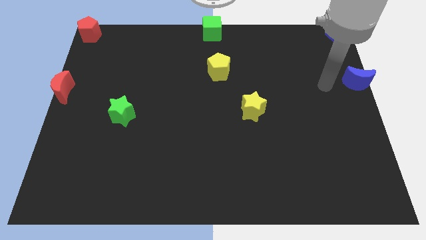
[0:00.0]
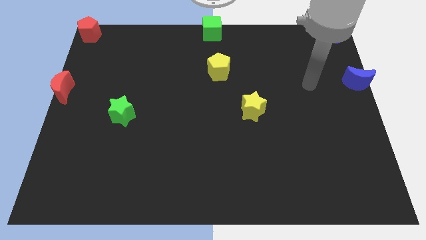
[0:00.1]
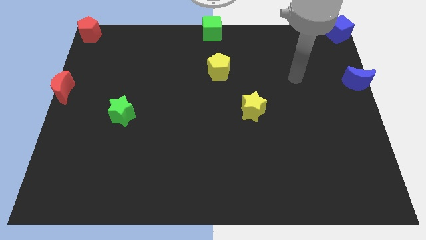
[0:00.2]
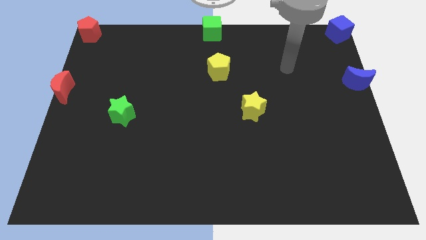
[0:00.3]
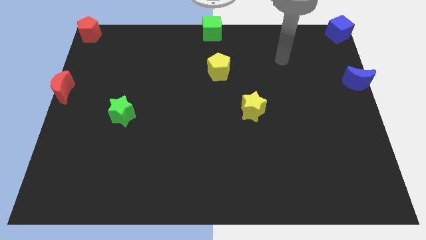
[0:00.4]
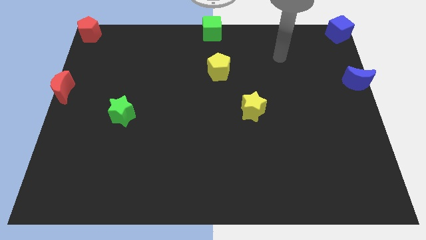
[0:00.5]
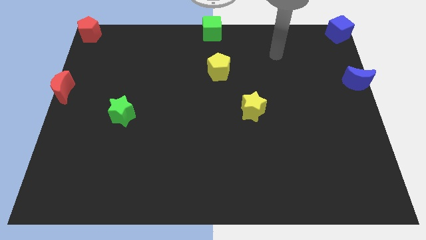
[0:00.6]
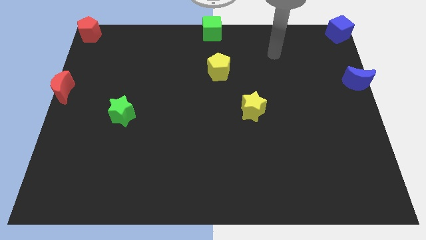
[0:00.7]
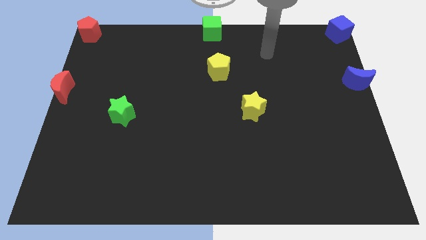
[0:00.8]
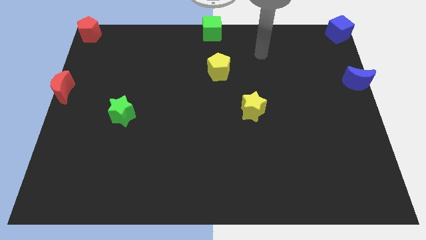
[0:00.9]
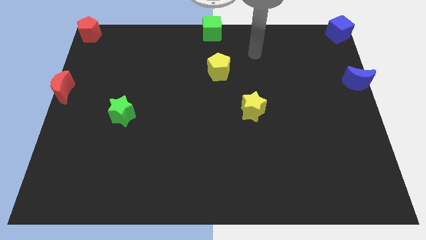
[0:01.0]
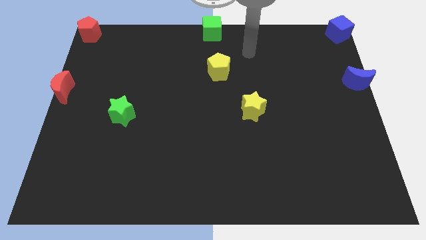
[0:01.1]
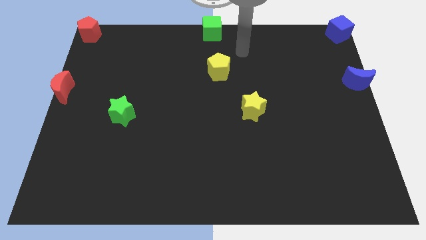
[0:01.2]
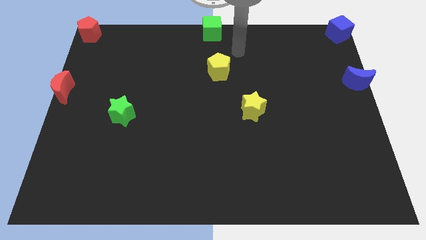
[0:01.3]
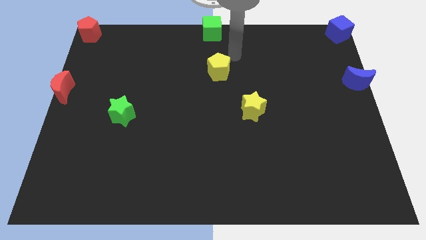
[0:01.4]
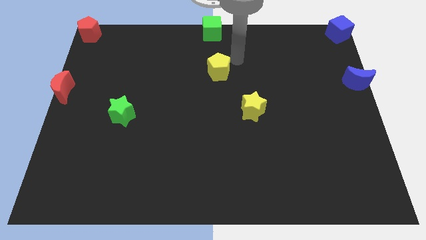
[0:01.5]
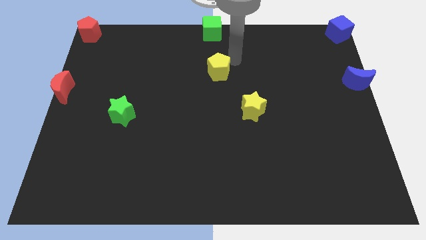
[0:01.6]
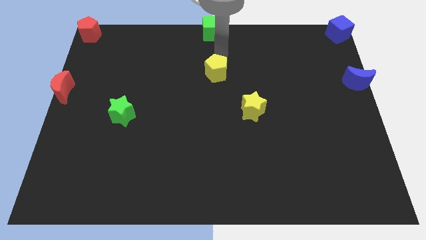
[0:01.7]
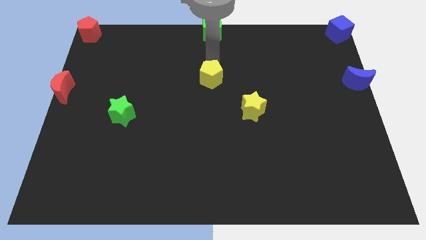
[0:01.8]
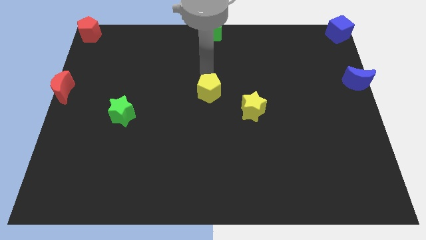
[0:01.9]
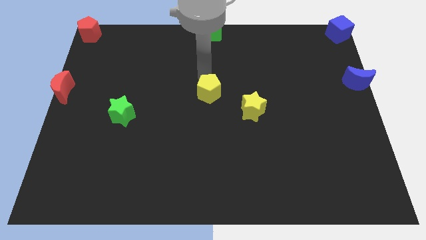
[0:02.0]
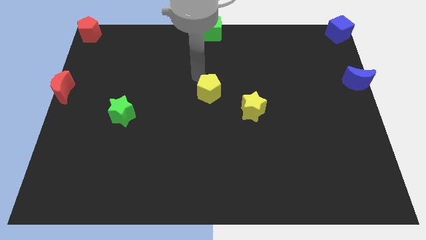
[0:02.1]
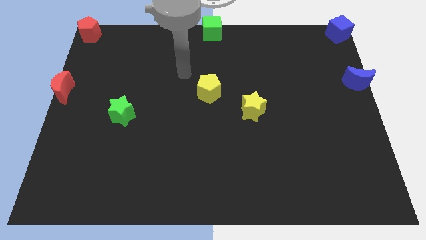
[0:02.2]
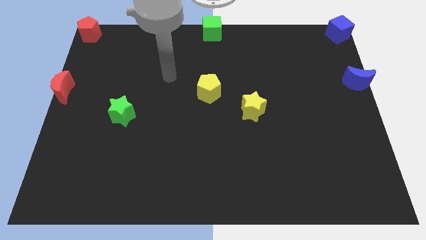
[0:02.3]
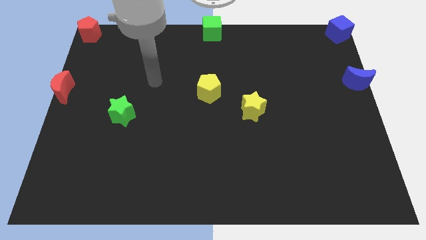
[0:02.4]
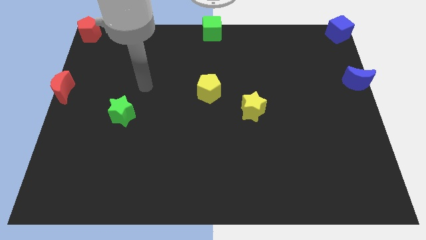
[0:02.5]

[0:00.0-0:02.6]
slightly move the yellow pentagon to the center of the board

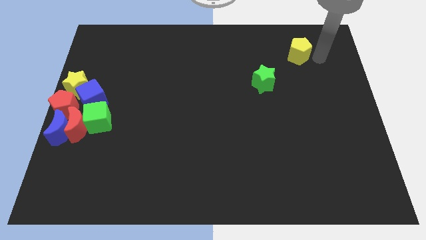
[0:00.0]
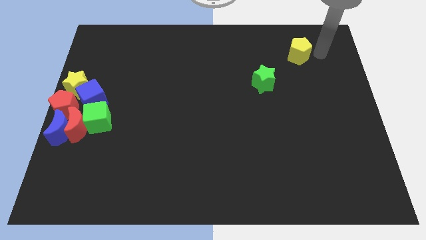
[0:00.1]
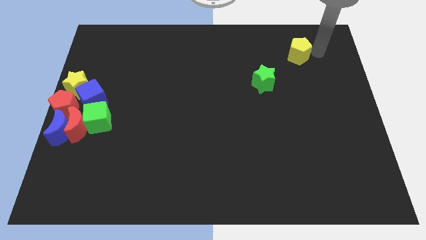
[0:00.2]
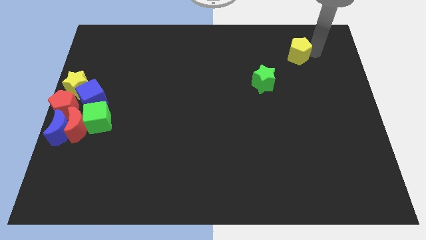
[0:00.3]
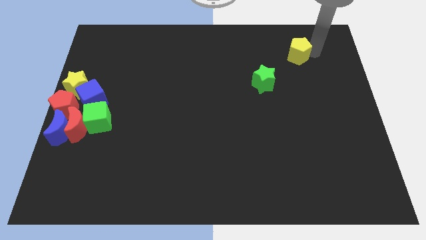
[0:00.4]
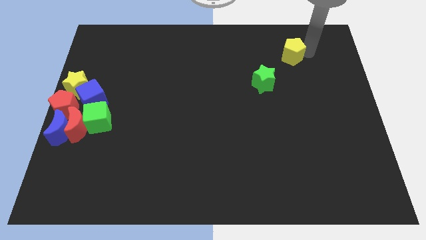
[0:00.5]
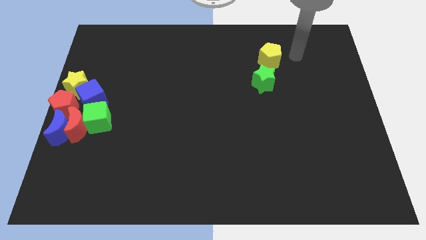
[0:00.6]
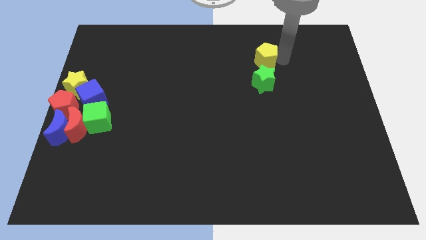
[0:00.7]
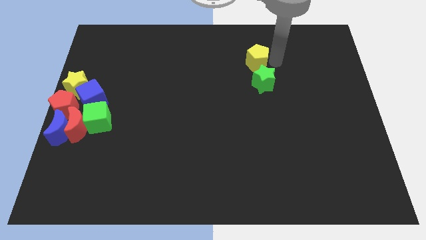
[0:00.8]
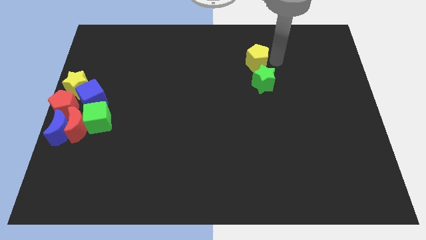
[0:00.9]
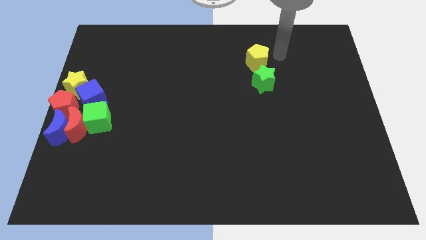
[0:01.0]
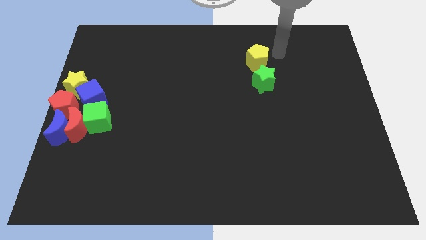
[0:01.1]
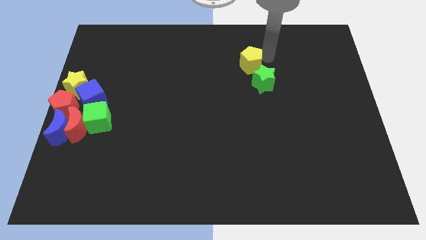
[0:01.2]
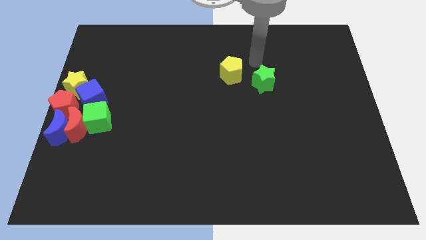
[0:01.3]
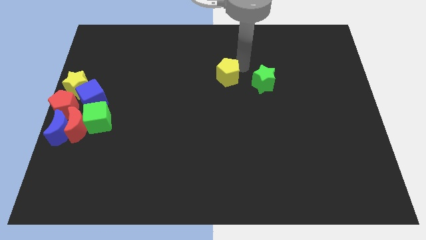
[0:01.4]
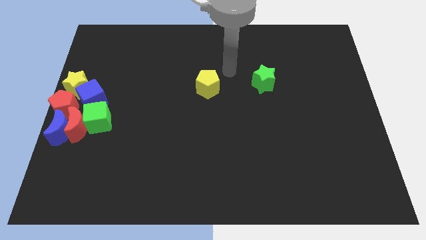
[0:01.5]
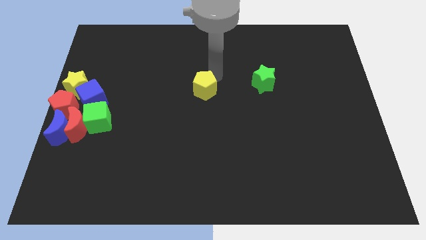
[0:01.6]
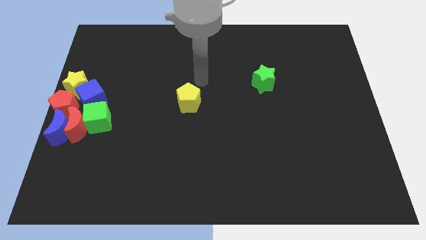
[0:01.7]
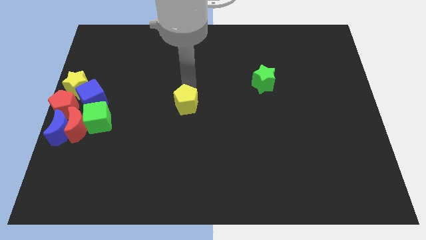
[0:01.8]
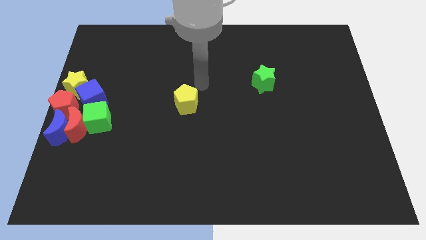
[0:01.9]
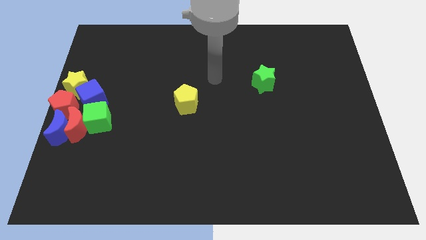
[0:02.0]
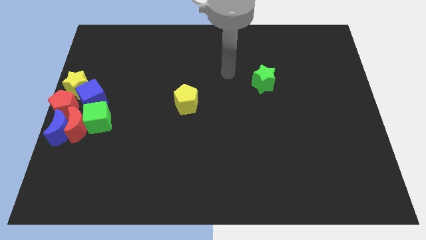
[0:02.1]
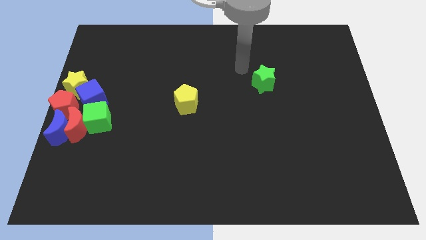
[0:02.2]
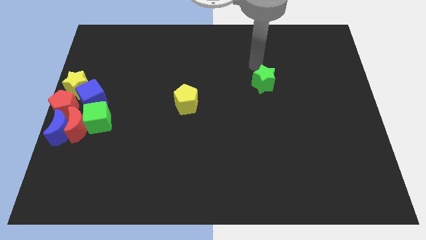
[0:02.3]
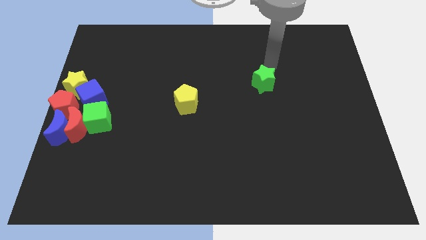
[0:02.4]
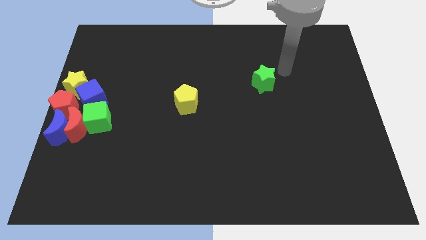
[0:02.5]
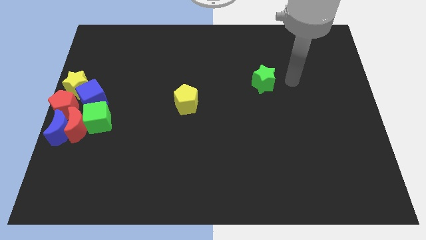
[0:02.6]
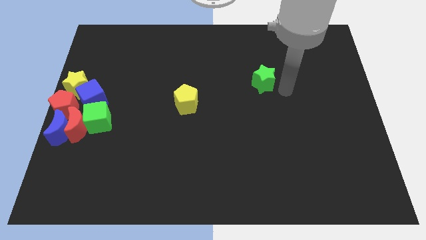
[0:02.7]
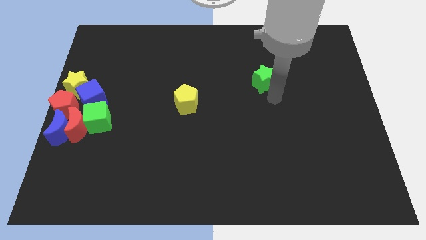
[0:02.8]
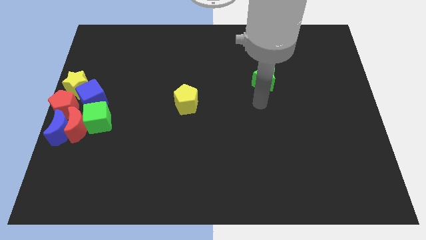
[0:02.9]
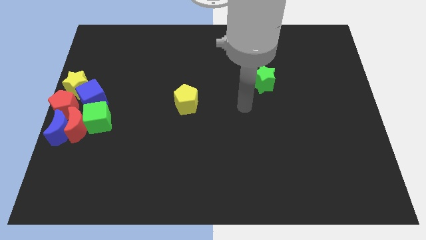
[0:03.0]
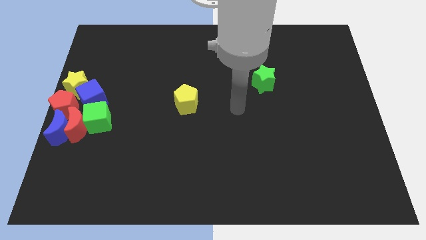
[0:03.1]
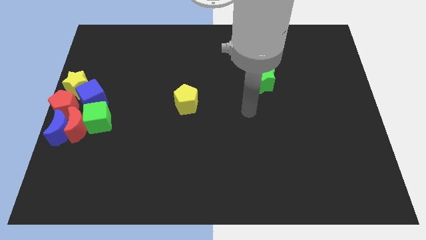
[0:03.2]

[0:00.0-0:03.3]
move the yellow pentagon towards the green cube

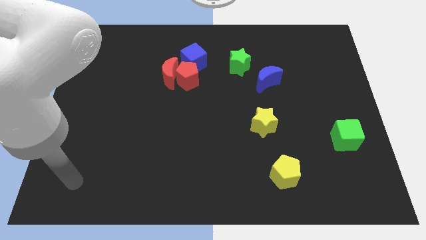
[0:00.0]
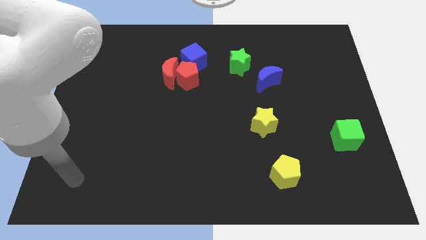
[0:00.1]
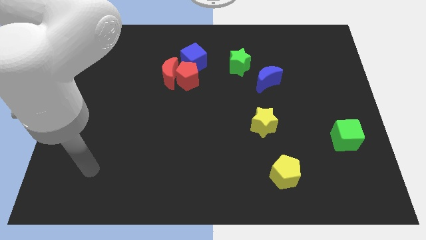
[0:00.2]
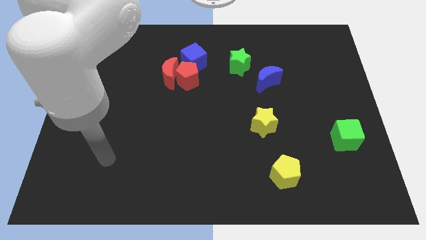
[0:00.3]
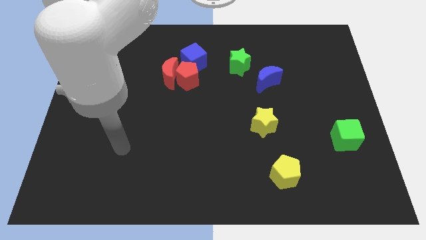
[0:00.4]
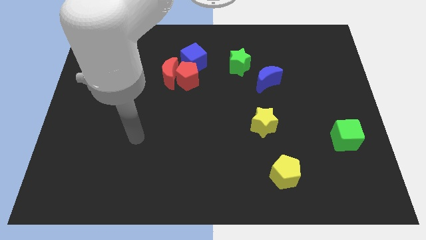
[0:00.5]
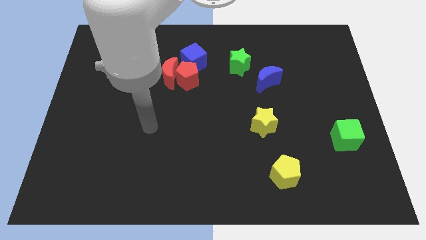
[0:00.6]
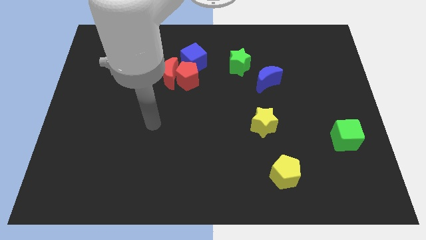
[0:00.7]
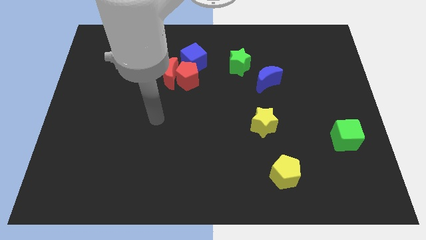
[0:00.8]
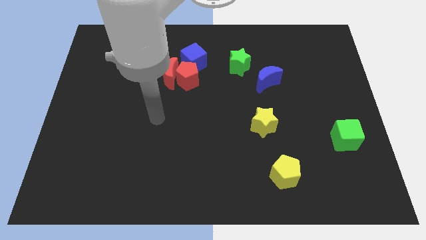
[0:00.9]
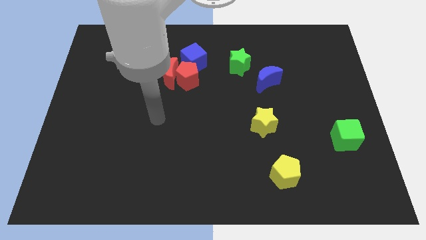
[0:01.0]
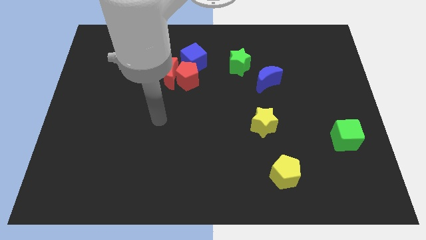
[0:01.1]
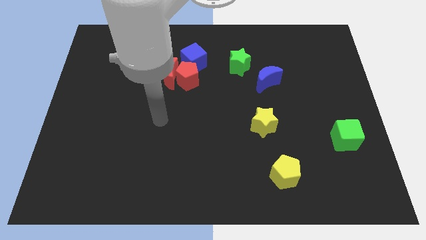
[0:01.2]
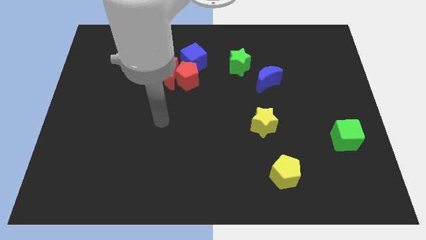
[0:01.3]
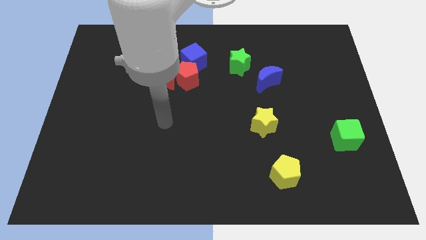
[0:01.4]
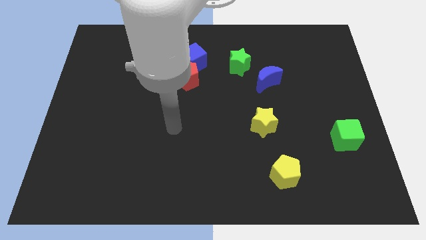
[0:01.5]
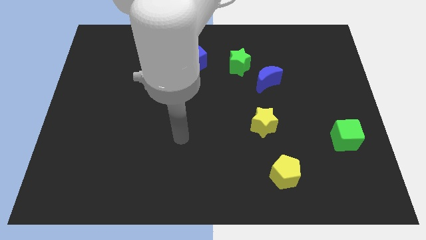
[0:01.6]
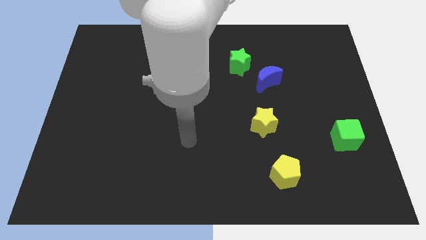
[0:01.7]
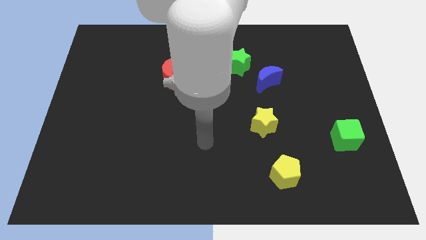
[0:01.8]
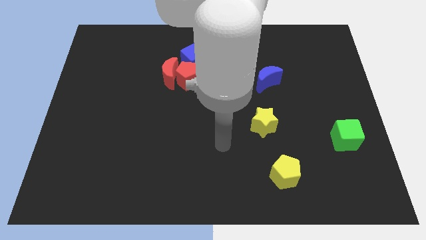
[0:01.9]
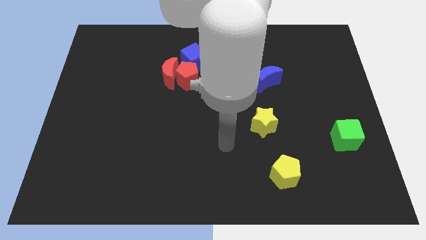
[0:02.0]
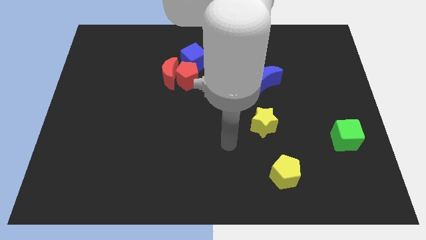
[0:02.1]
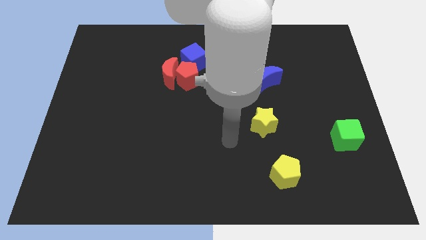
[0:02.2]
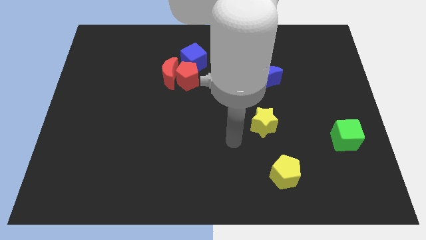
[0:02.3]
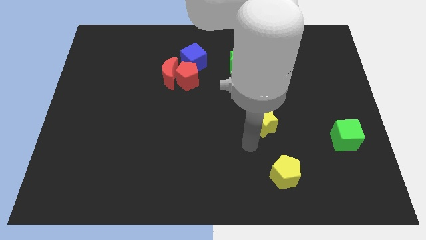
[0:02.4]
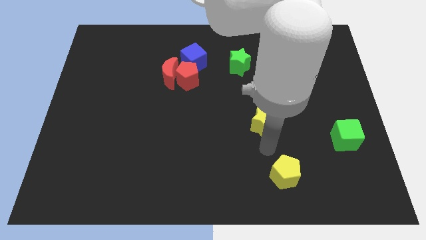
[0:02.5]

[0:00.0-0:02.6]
move the arm towards the bottom of the yellow star

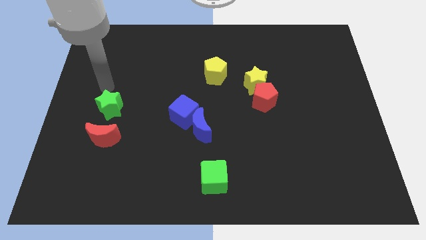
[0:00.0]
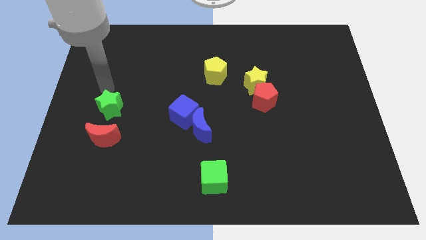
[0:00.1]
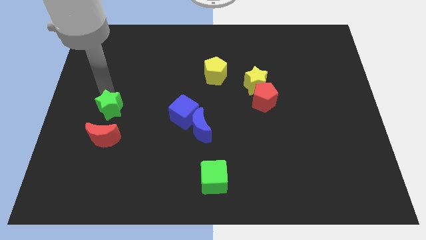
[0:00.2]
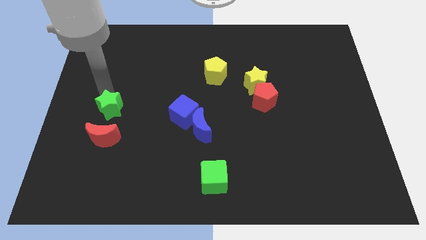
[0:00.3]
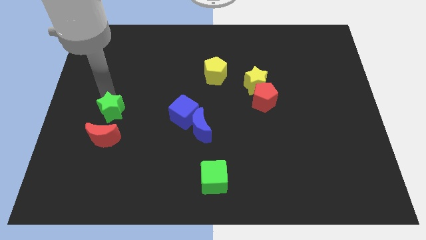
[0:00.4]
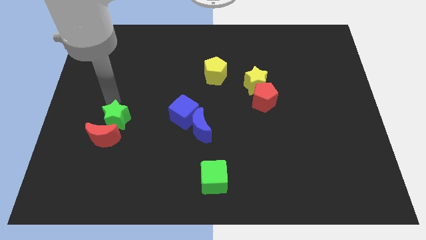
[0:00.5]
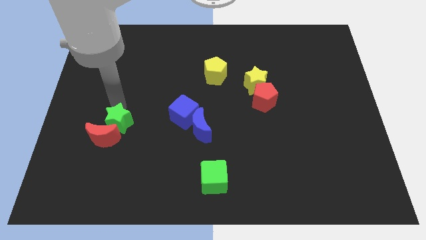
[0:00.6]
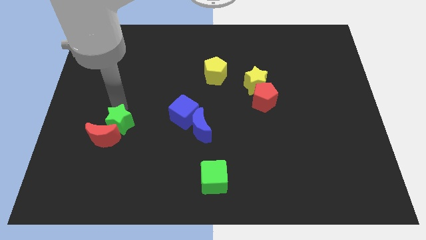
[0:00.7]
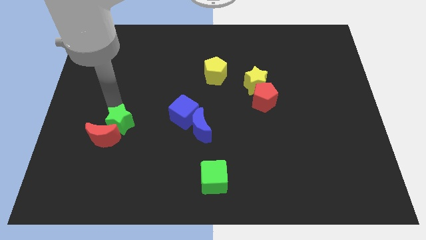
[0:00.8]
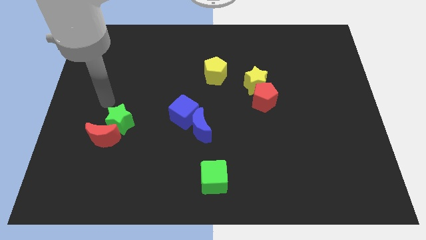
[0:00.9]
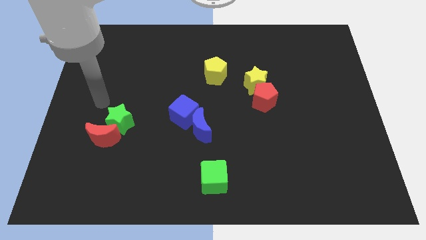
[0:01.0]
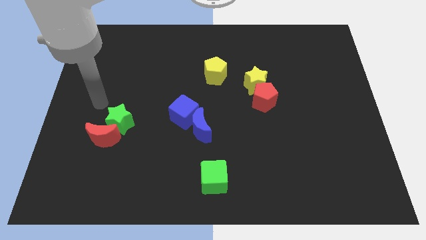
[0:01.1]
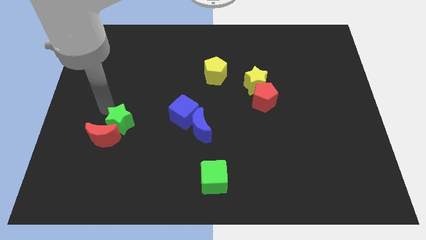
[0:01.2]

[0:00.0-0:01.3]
move the green star into the red crescent
